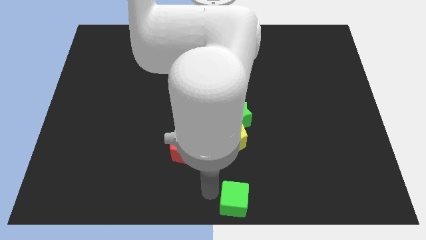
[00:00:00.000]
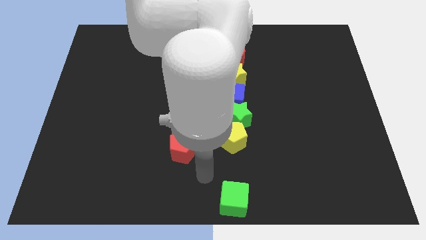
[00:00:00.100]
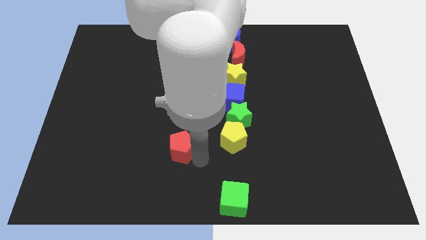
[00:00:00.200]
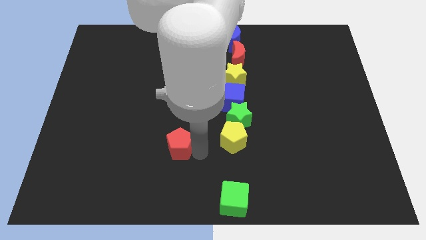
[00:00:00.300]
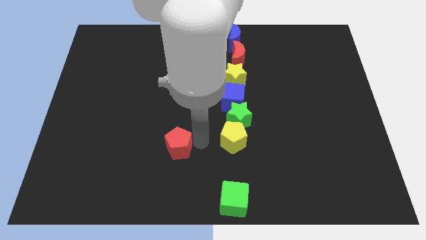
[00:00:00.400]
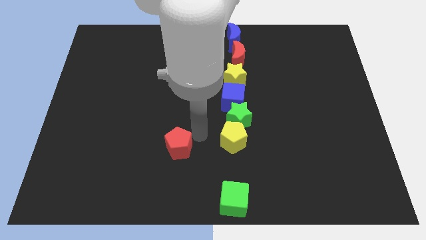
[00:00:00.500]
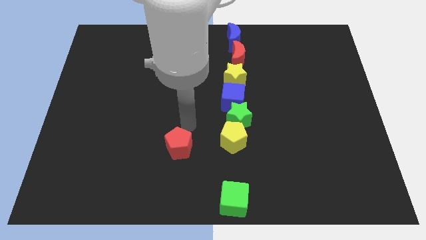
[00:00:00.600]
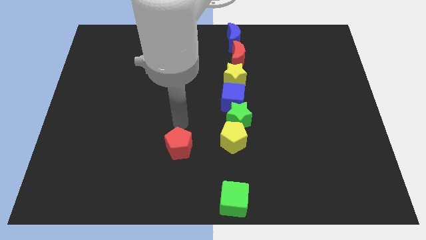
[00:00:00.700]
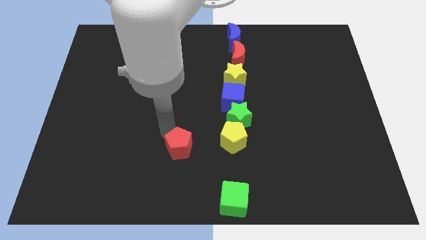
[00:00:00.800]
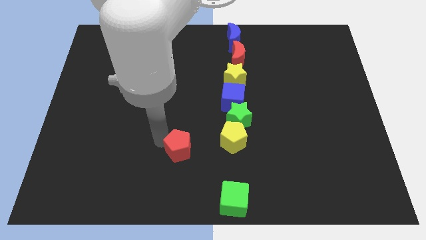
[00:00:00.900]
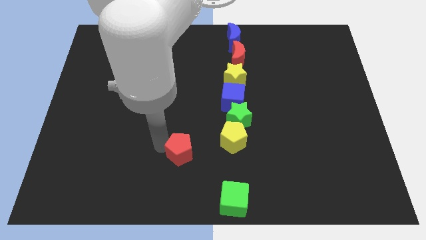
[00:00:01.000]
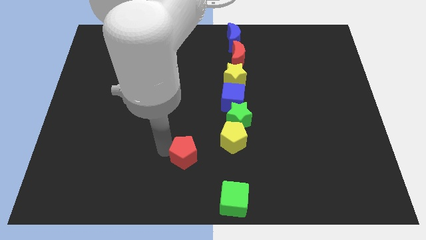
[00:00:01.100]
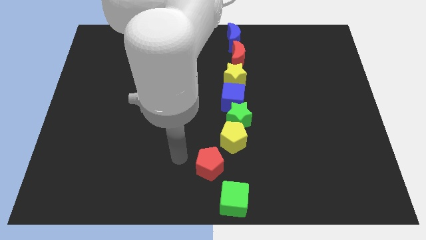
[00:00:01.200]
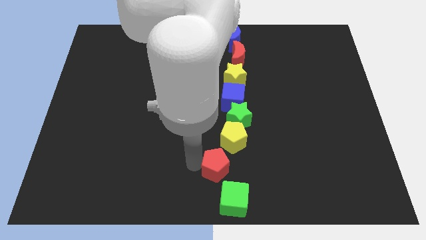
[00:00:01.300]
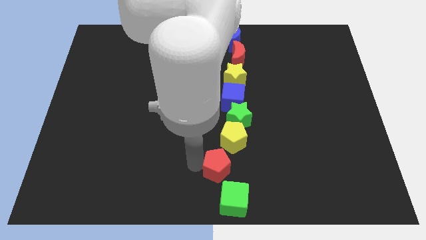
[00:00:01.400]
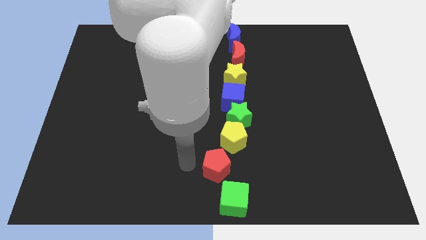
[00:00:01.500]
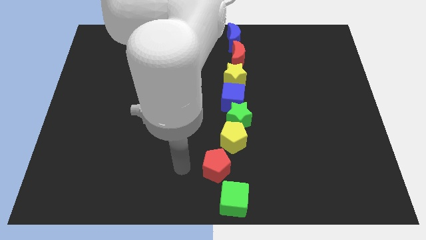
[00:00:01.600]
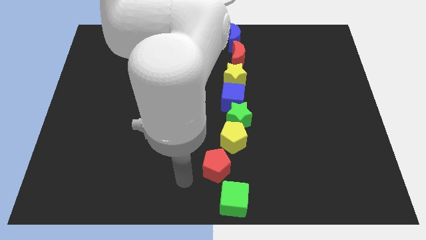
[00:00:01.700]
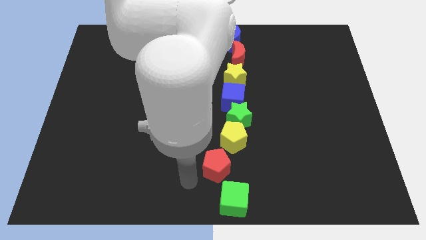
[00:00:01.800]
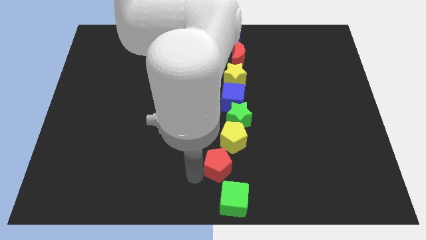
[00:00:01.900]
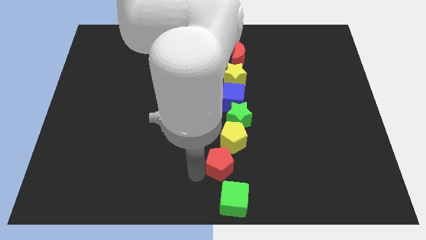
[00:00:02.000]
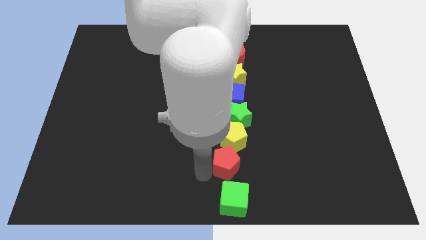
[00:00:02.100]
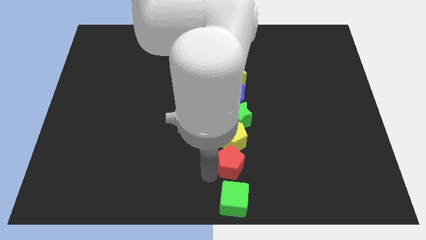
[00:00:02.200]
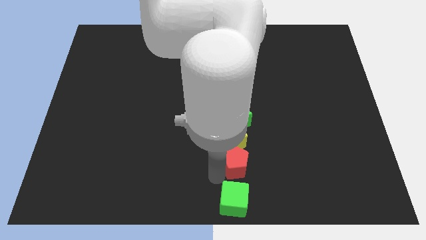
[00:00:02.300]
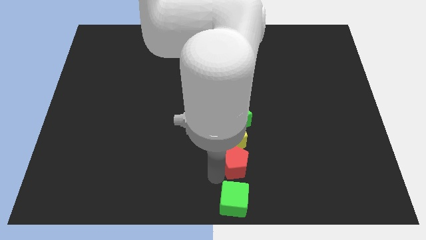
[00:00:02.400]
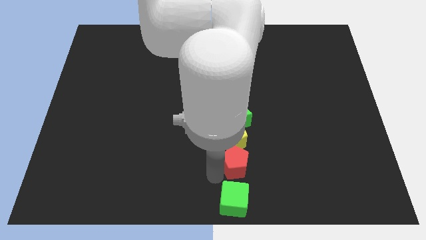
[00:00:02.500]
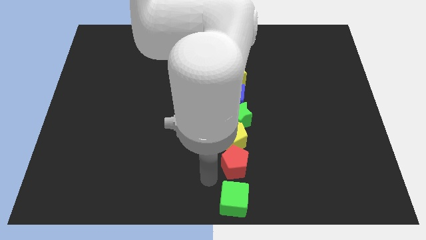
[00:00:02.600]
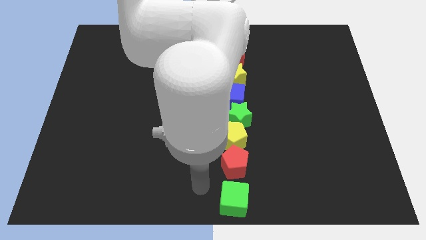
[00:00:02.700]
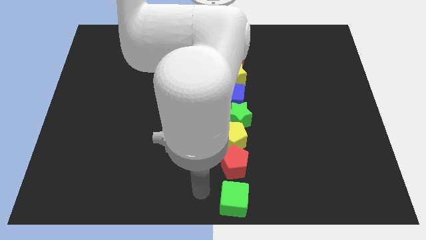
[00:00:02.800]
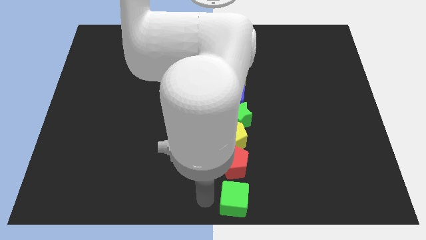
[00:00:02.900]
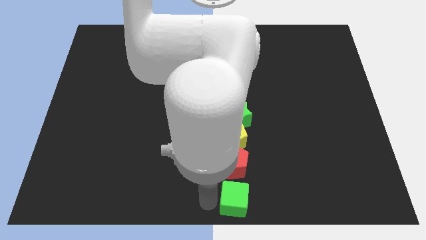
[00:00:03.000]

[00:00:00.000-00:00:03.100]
place the red pentagon in between the green cube and yellow pentagon

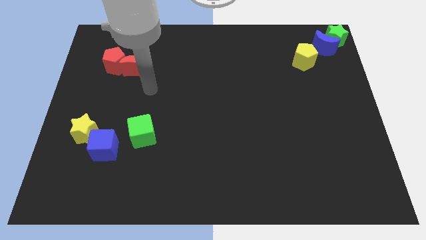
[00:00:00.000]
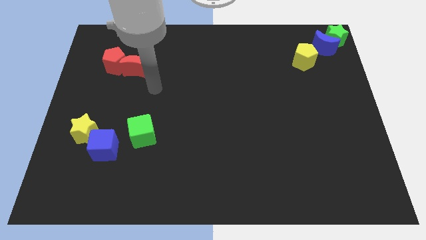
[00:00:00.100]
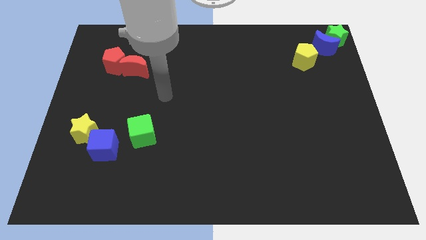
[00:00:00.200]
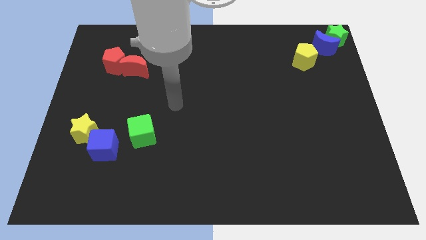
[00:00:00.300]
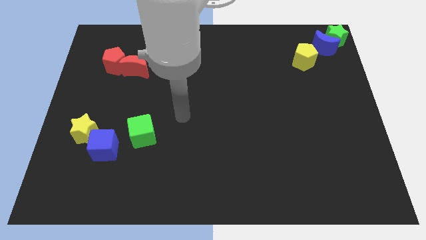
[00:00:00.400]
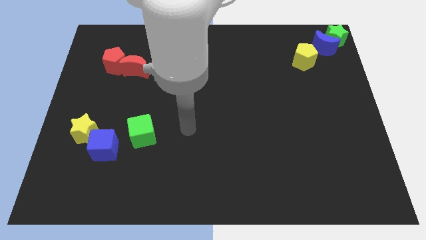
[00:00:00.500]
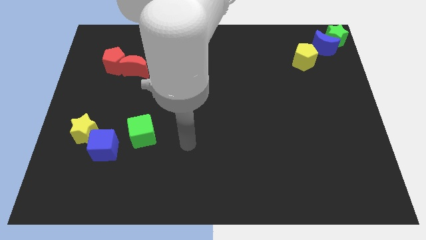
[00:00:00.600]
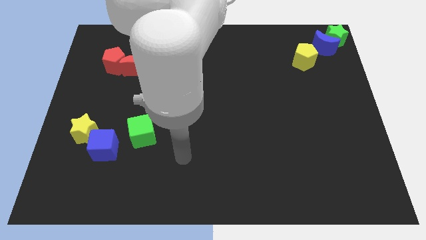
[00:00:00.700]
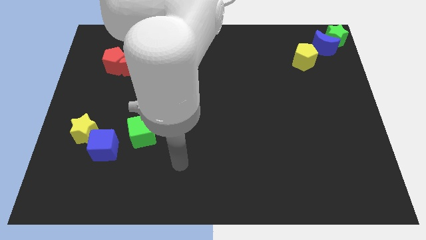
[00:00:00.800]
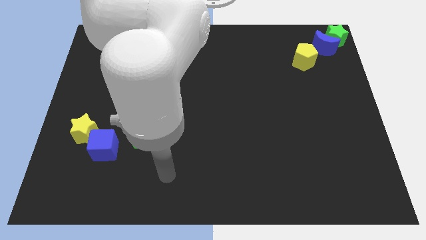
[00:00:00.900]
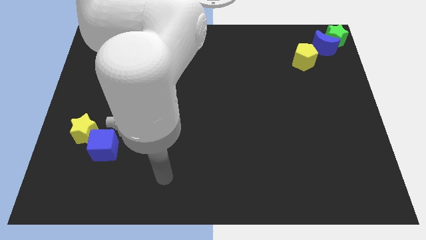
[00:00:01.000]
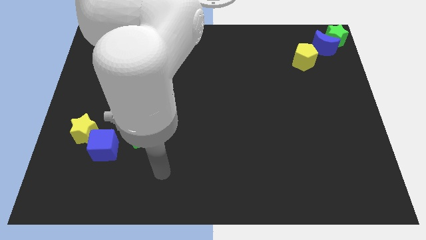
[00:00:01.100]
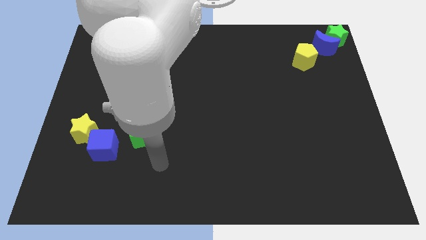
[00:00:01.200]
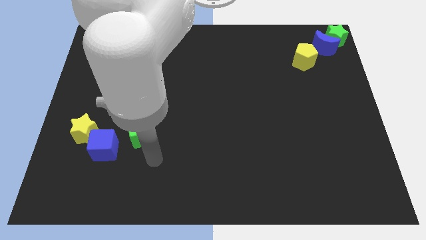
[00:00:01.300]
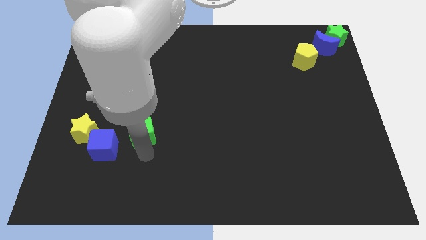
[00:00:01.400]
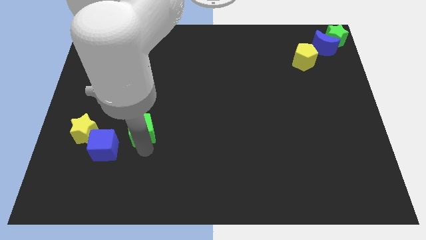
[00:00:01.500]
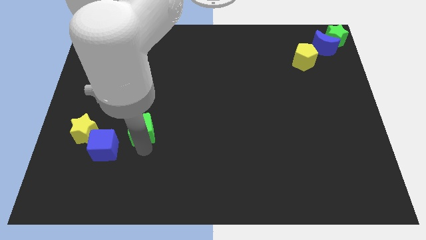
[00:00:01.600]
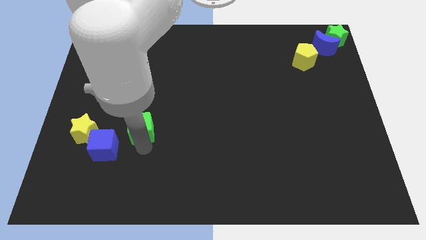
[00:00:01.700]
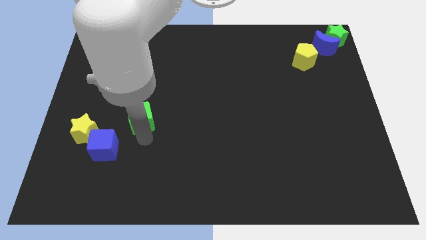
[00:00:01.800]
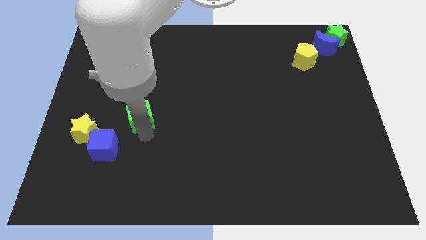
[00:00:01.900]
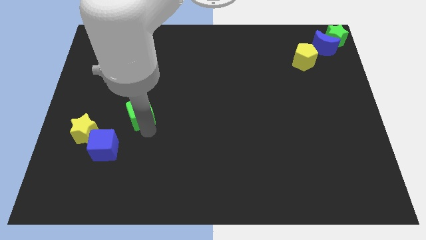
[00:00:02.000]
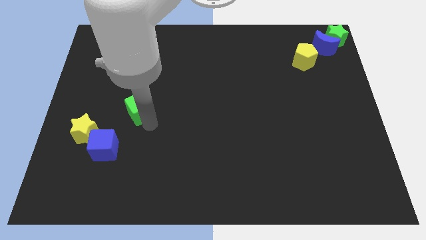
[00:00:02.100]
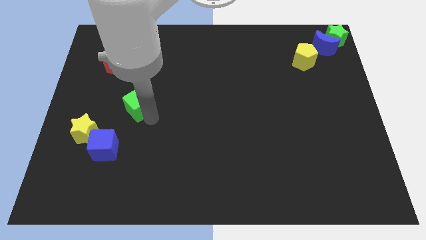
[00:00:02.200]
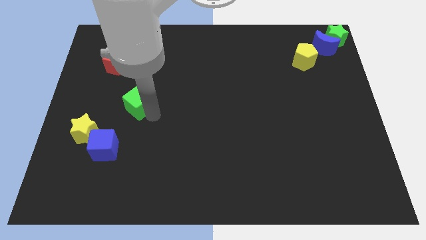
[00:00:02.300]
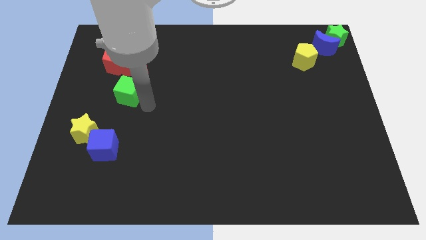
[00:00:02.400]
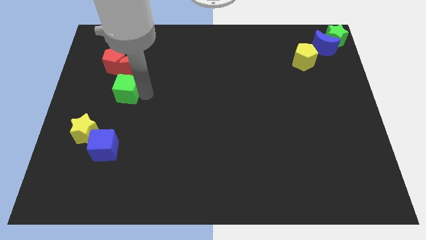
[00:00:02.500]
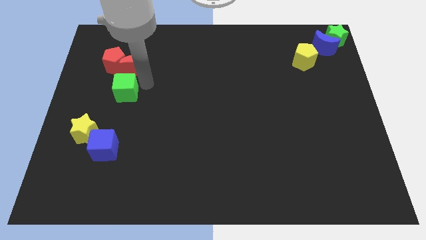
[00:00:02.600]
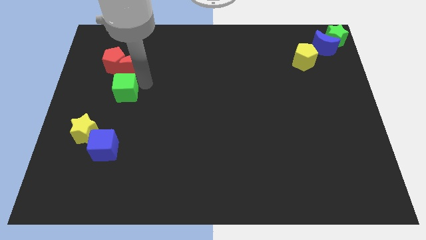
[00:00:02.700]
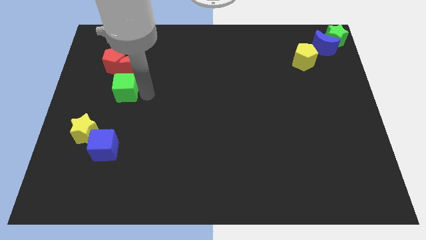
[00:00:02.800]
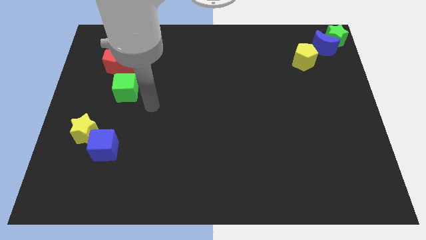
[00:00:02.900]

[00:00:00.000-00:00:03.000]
put the green cube below the group of red blocks

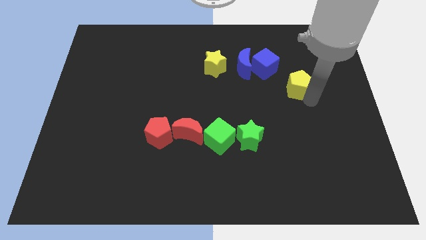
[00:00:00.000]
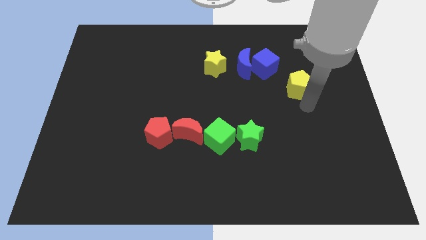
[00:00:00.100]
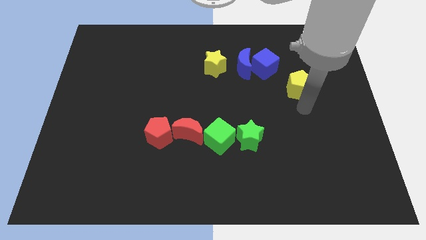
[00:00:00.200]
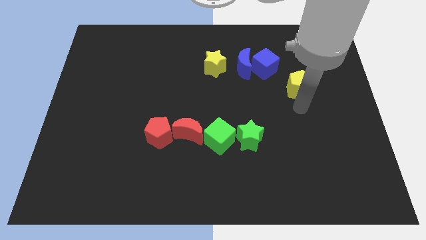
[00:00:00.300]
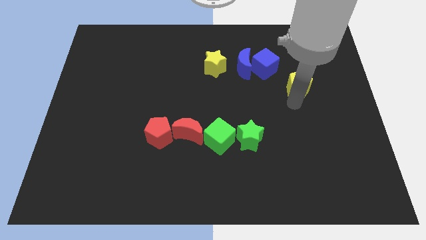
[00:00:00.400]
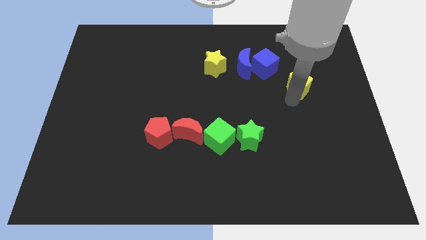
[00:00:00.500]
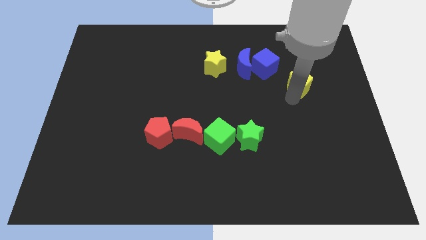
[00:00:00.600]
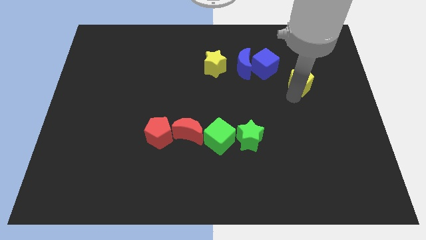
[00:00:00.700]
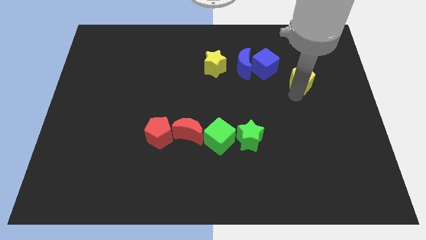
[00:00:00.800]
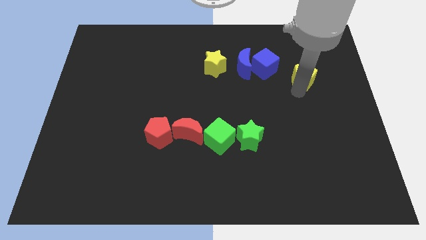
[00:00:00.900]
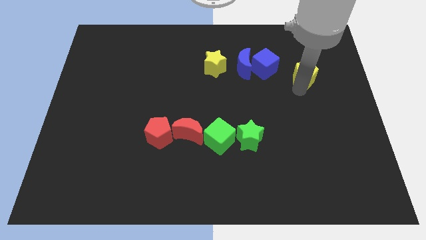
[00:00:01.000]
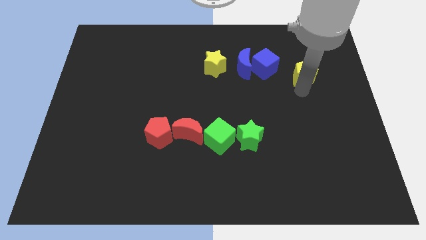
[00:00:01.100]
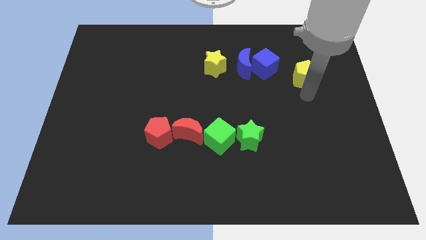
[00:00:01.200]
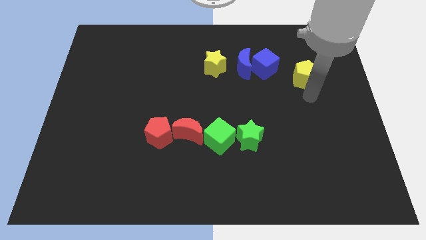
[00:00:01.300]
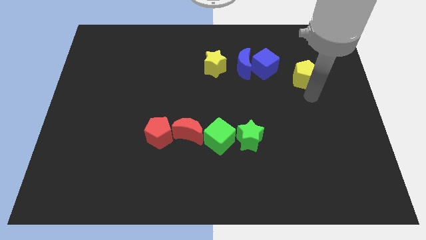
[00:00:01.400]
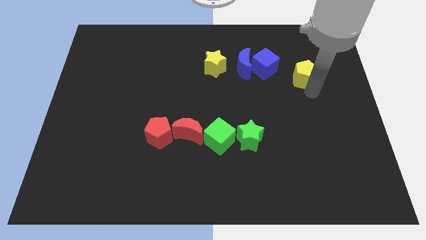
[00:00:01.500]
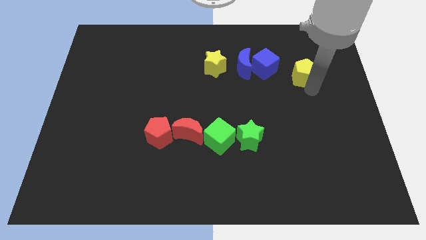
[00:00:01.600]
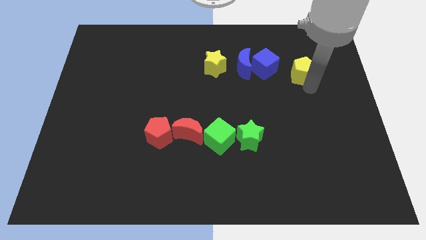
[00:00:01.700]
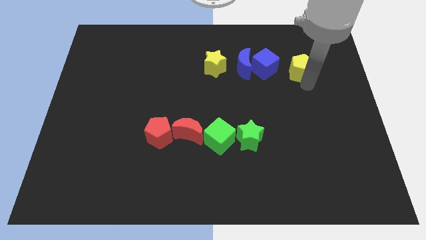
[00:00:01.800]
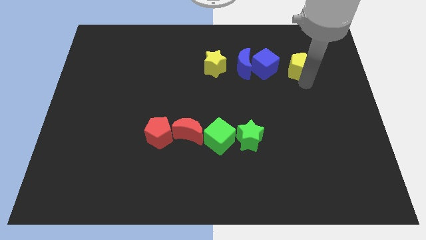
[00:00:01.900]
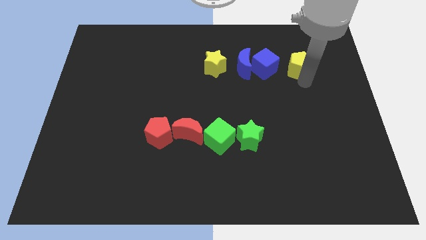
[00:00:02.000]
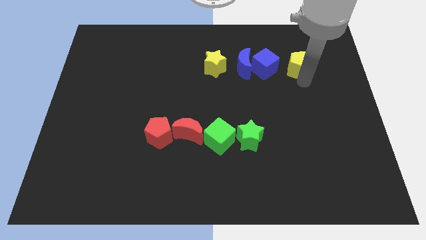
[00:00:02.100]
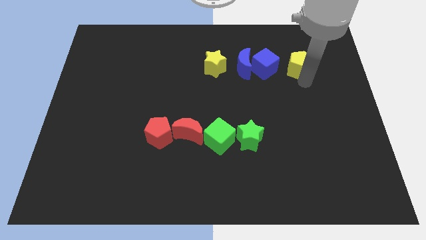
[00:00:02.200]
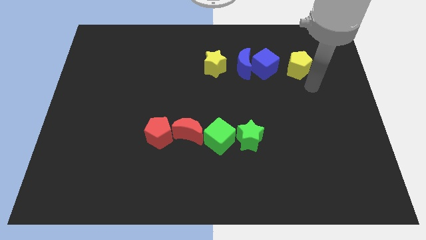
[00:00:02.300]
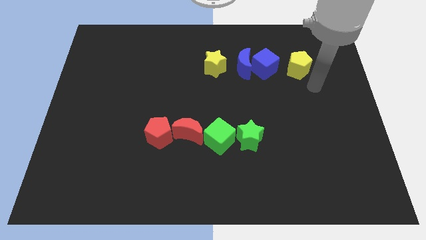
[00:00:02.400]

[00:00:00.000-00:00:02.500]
place the yellow pentagon to the right side of the blue cube

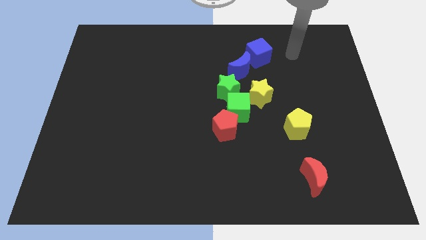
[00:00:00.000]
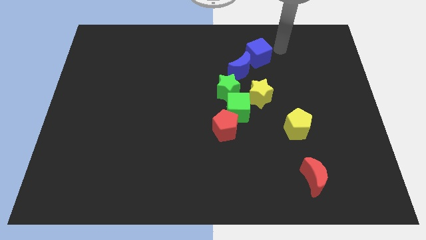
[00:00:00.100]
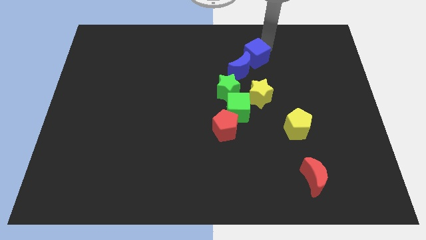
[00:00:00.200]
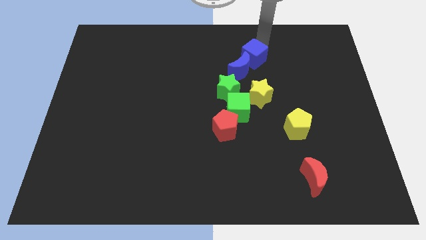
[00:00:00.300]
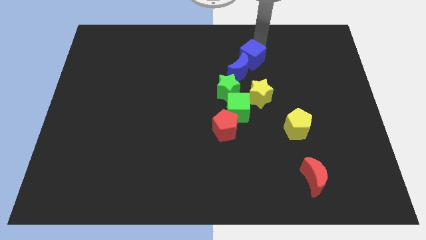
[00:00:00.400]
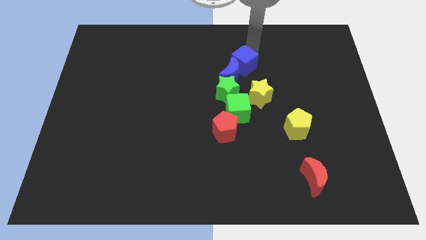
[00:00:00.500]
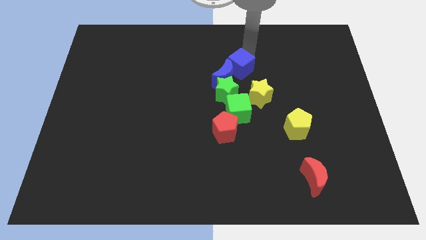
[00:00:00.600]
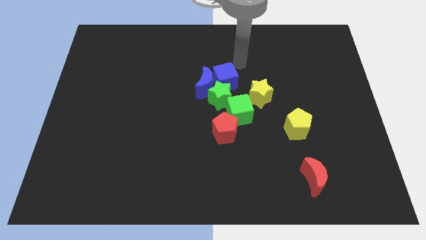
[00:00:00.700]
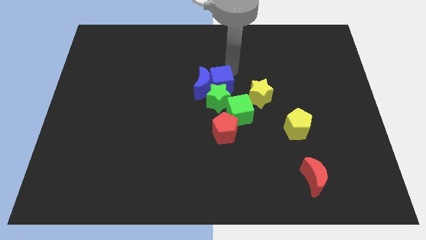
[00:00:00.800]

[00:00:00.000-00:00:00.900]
push the blue blocks into the group of blocks
